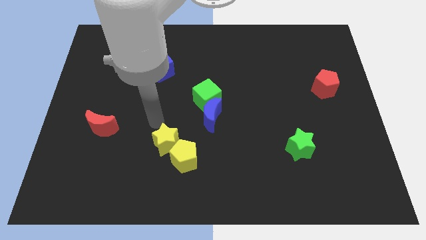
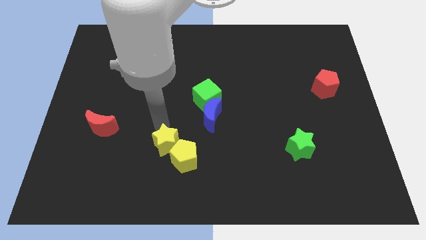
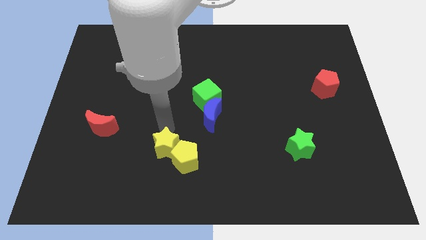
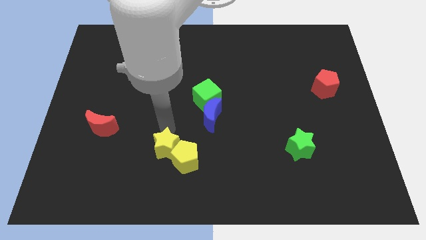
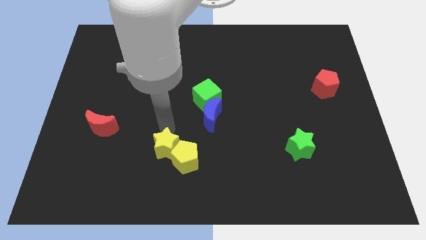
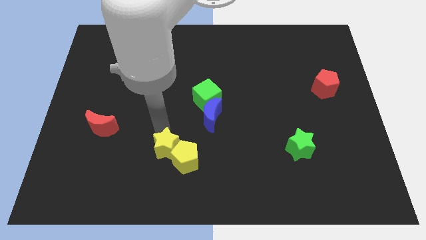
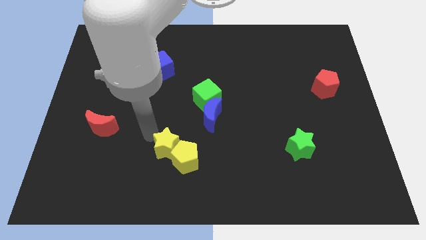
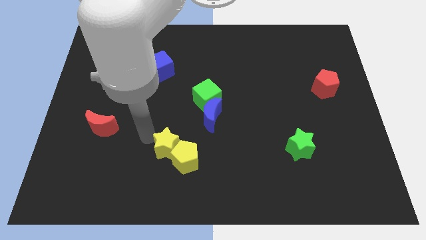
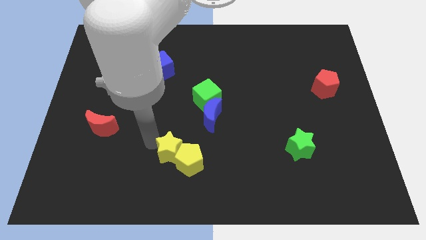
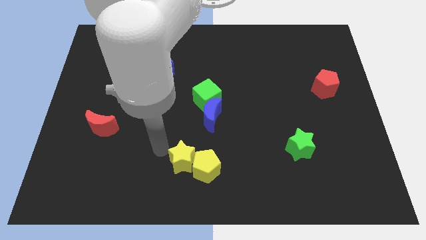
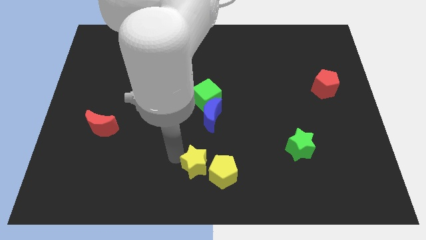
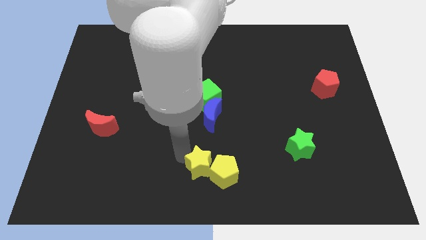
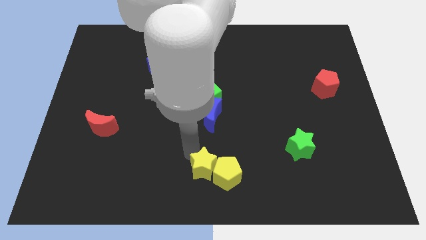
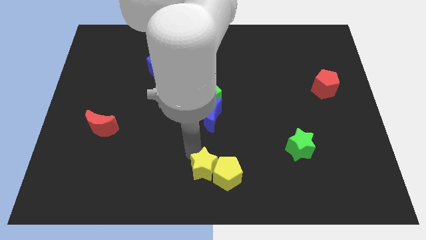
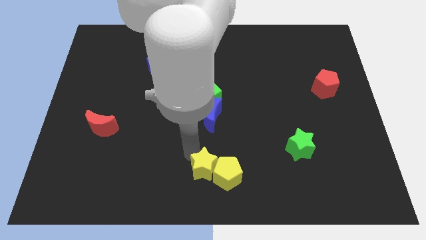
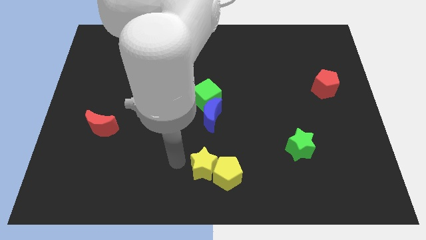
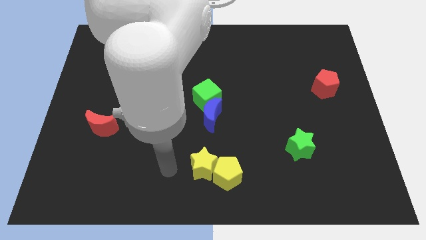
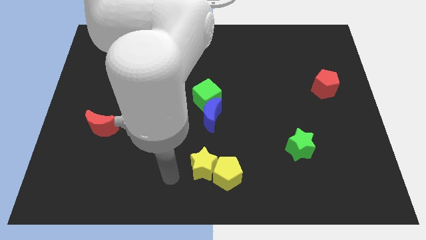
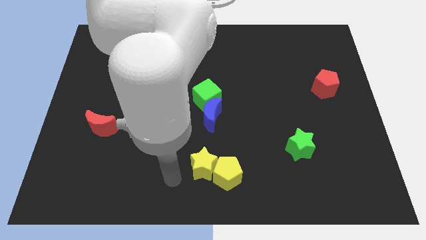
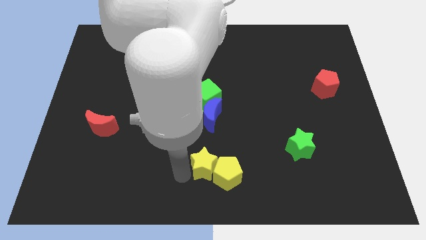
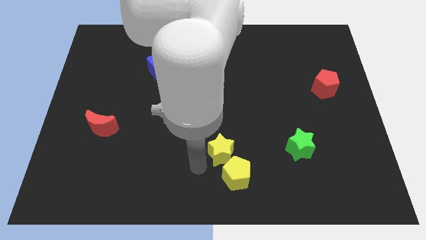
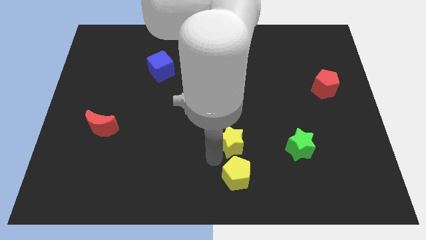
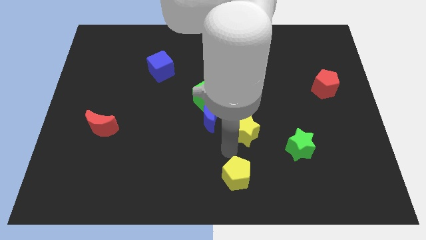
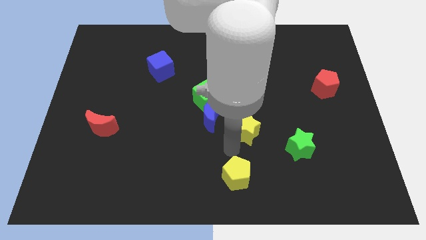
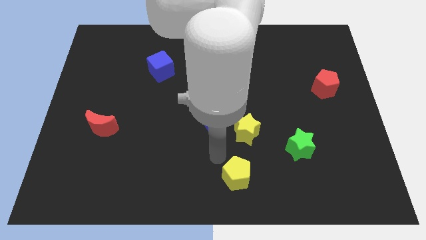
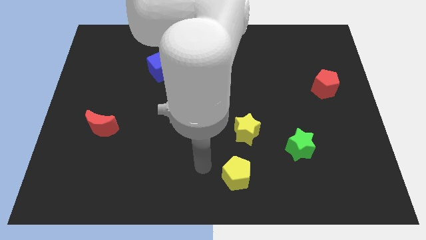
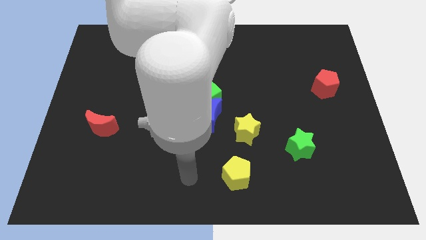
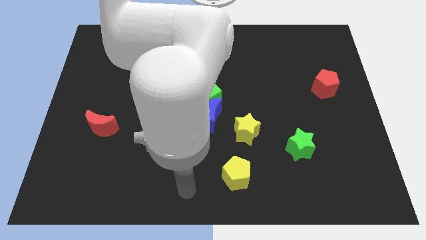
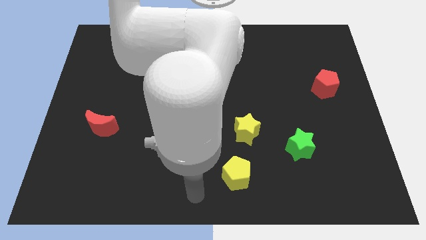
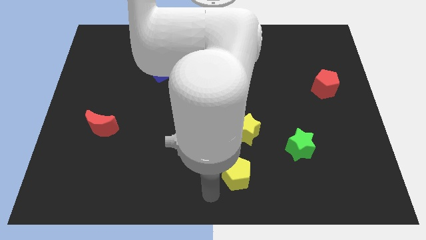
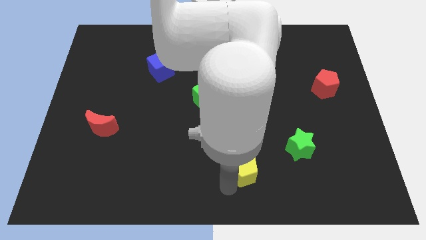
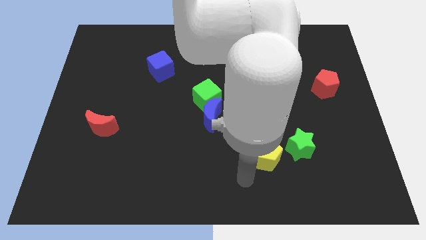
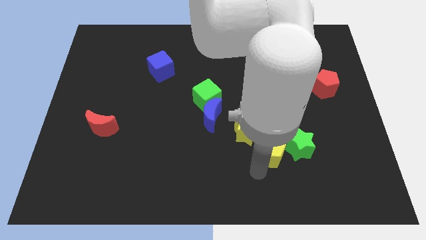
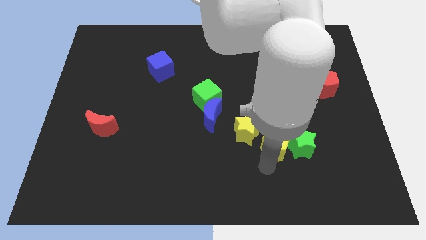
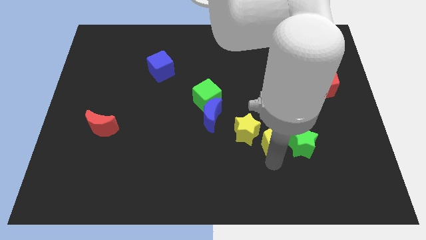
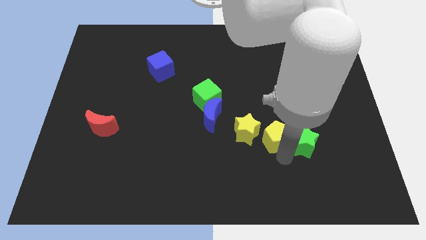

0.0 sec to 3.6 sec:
put the yellow blocks in between the green star and blue moon

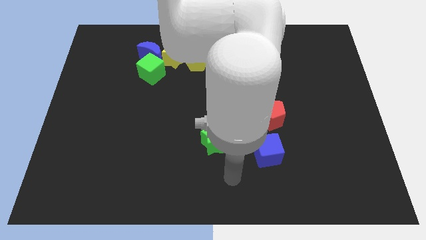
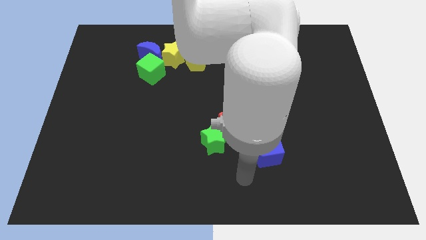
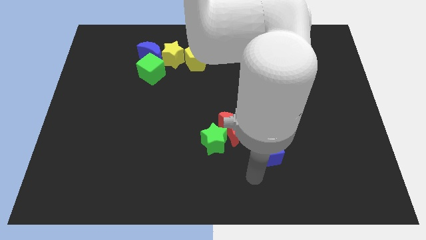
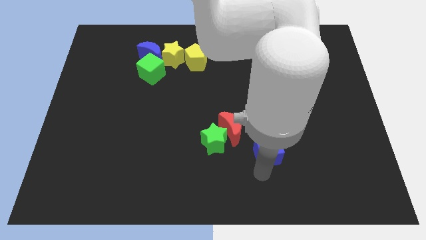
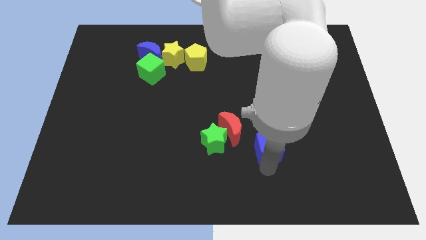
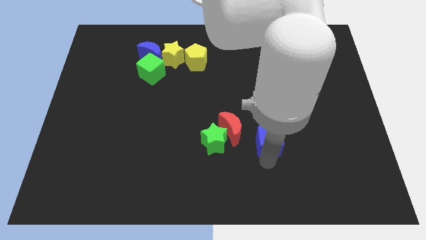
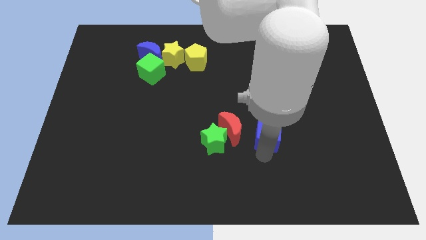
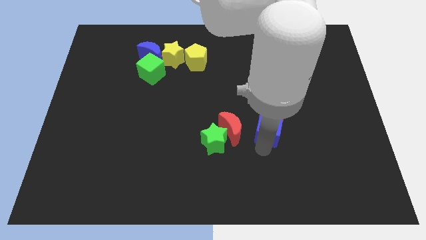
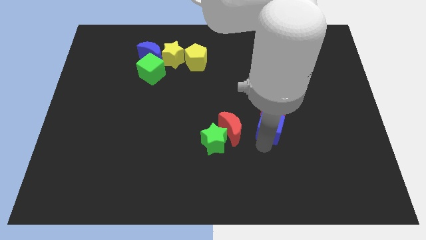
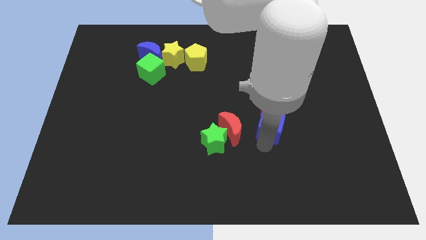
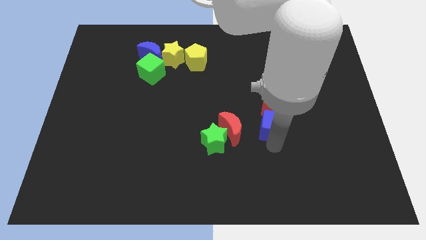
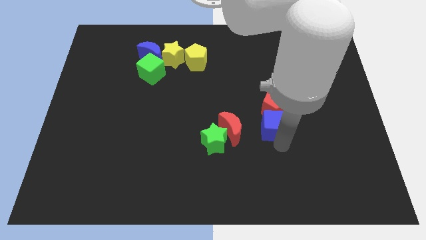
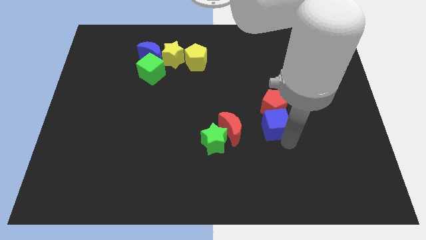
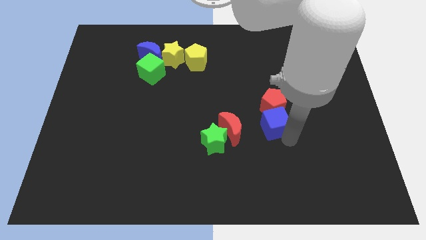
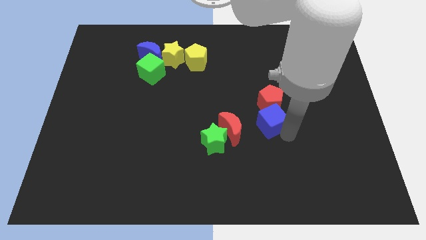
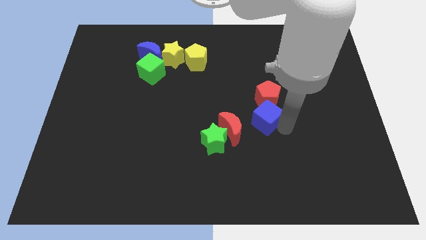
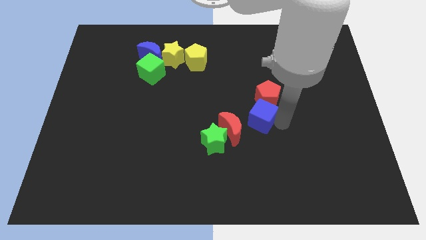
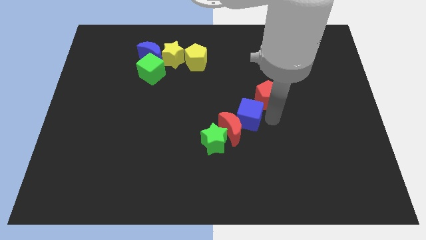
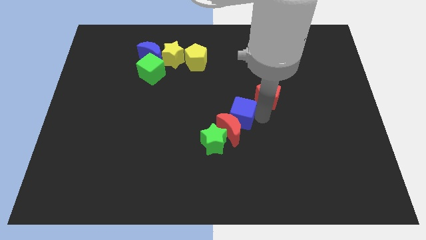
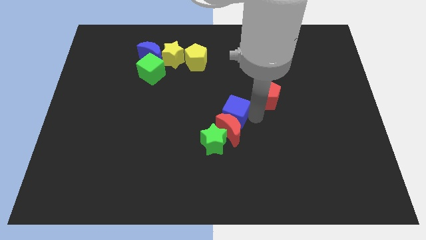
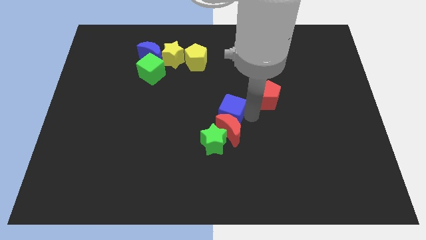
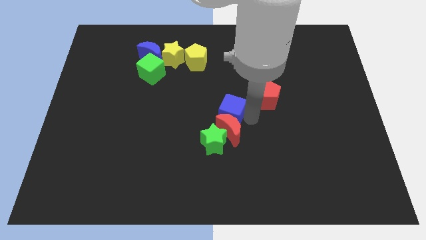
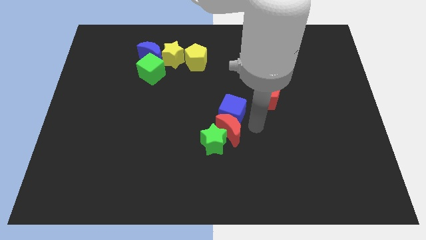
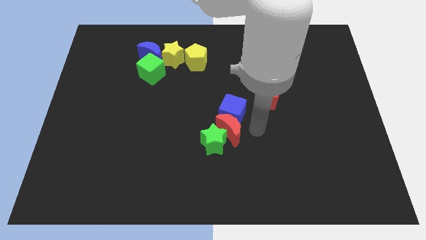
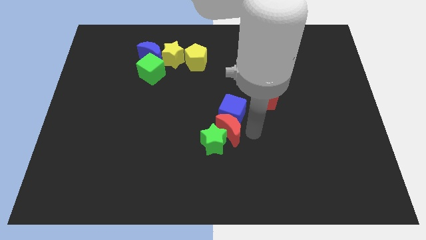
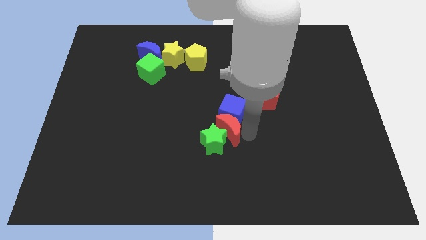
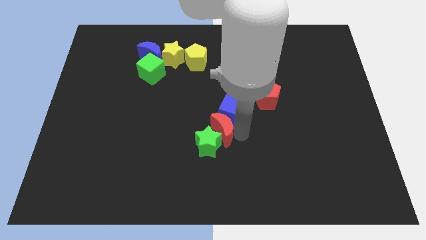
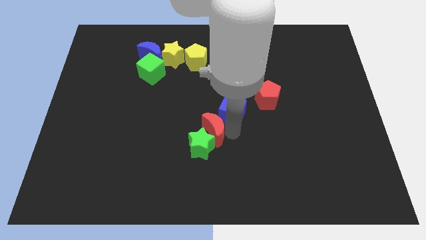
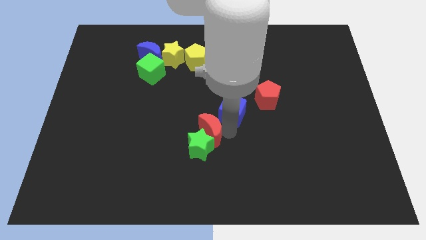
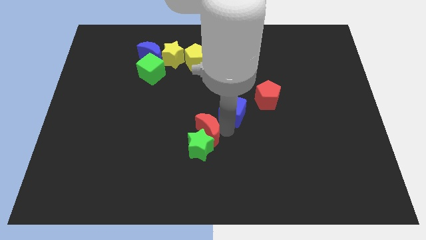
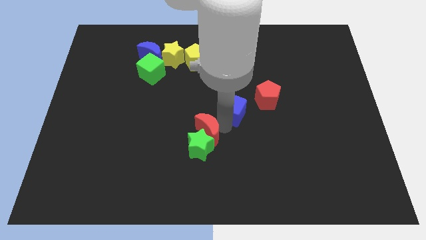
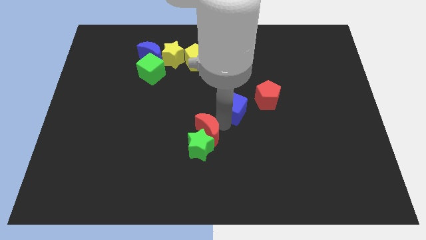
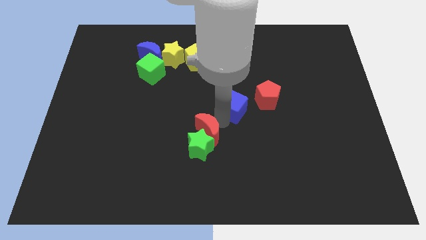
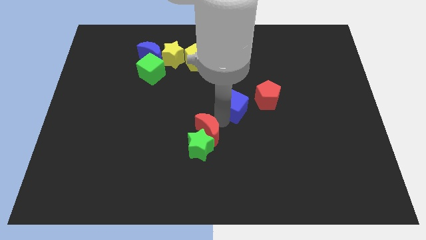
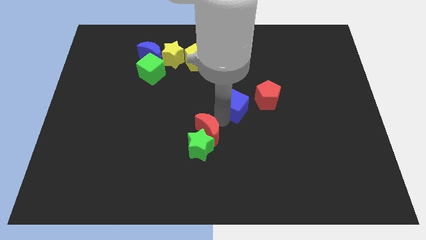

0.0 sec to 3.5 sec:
move the blue cube in between the red pentagon and red crescent diagonally

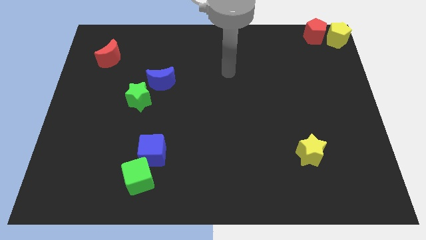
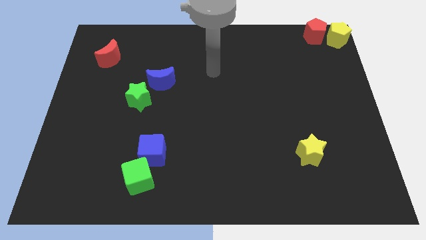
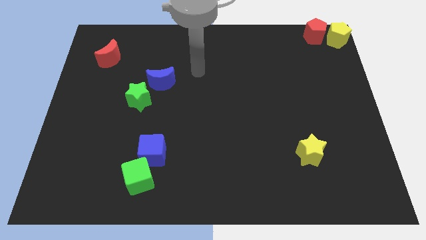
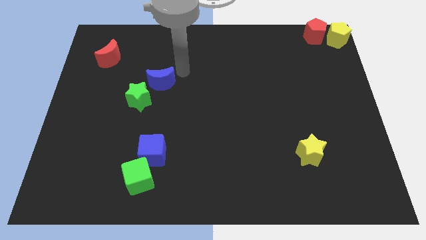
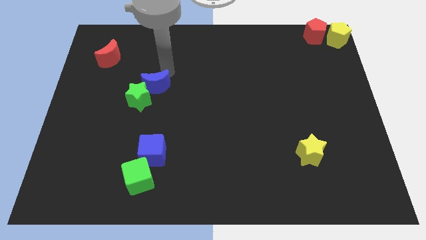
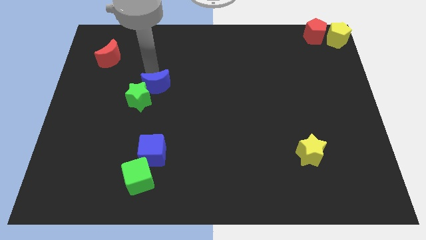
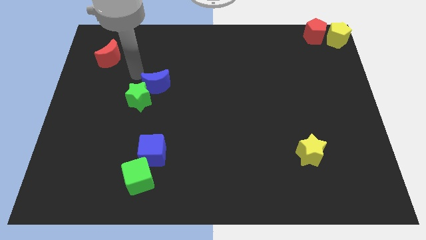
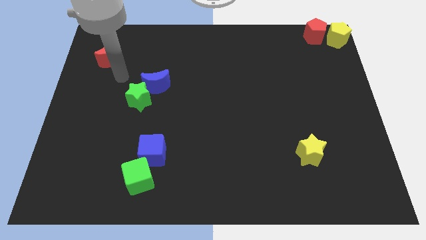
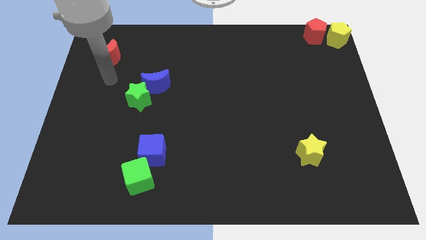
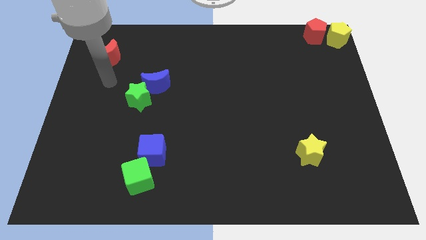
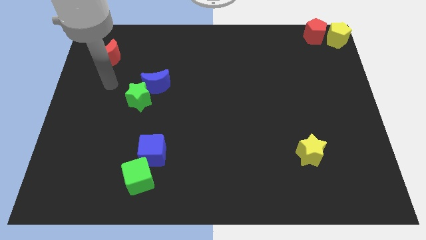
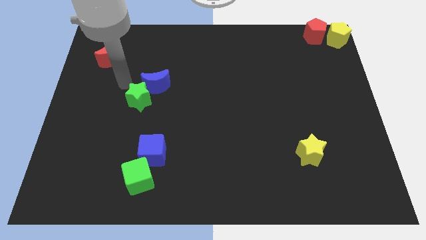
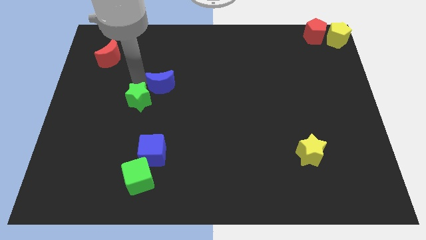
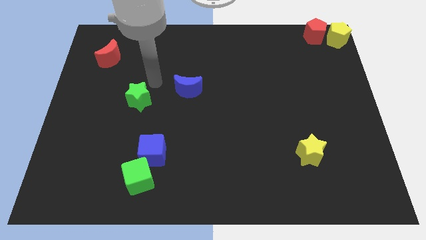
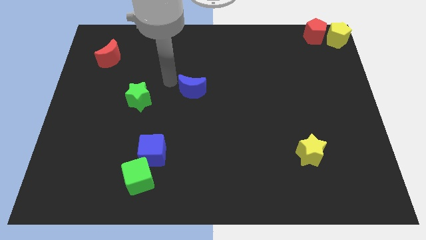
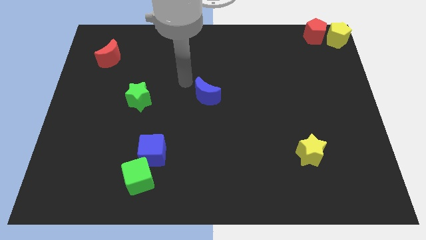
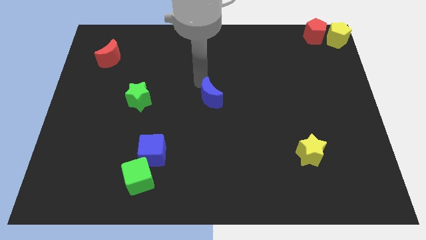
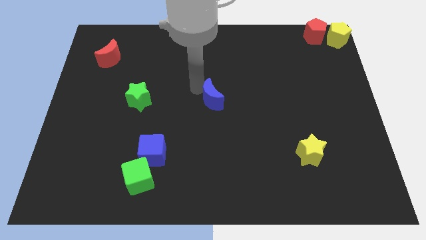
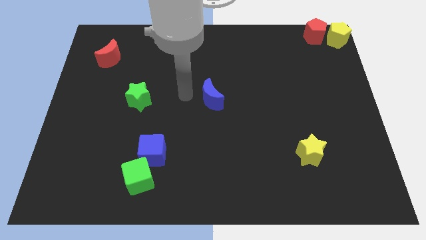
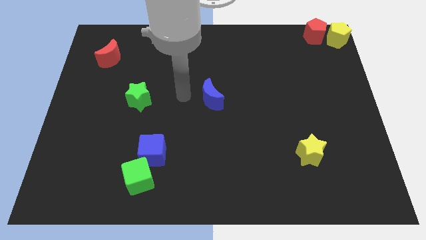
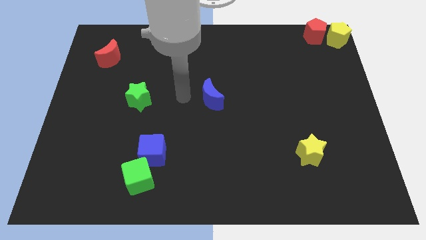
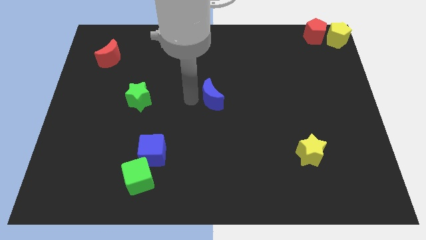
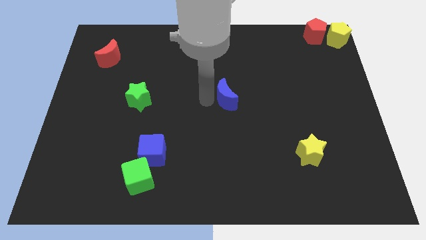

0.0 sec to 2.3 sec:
push the blue moon to the center of the board
